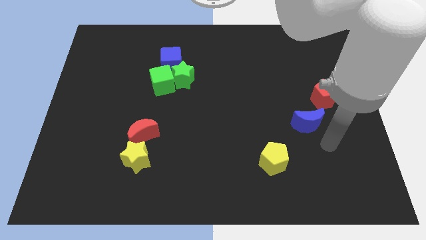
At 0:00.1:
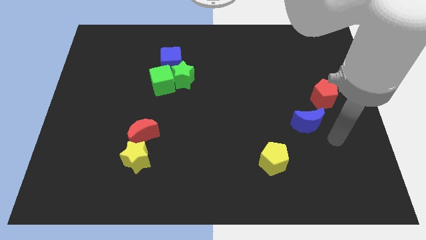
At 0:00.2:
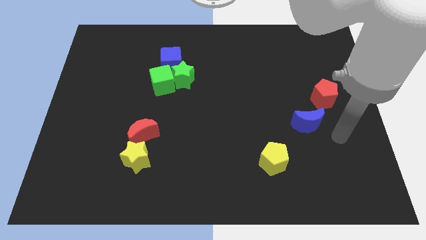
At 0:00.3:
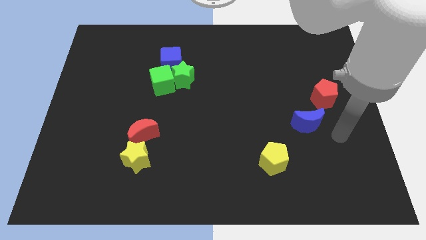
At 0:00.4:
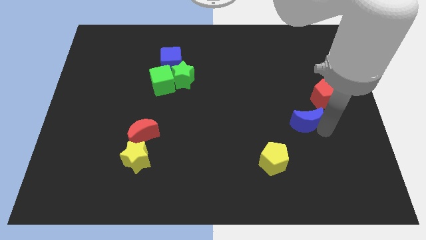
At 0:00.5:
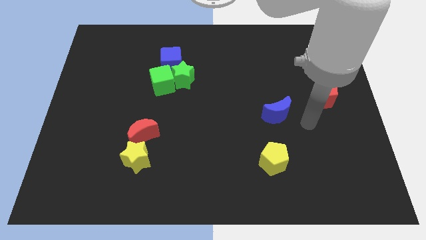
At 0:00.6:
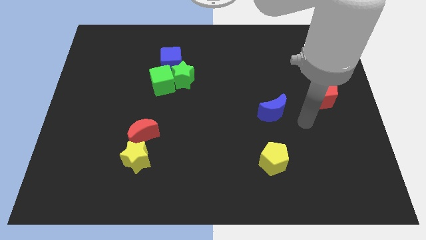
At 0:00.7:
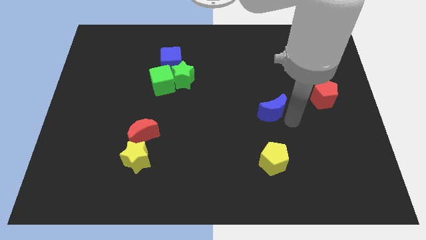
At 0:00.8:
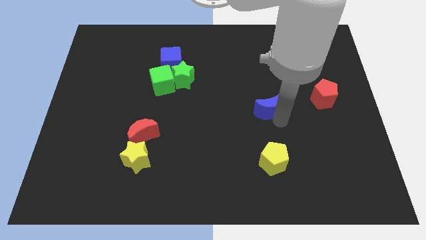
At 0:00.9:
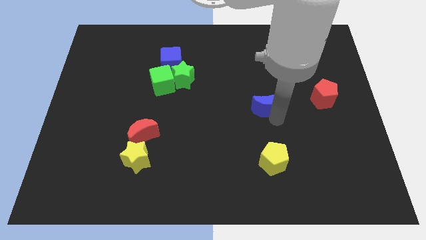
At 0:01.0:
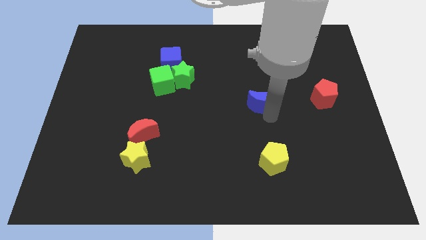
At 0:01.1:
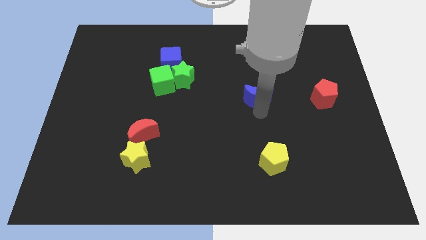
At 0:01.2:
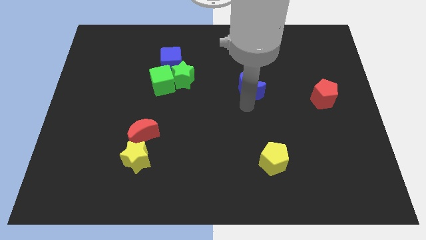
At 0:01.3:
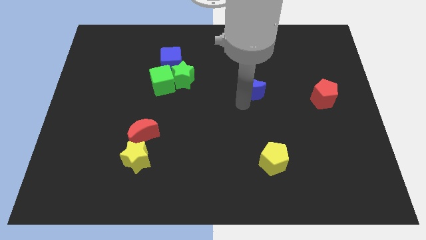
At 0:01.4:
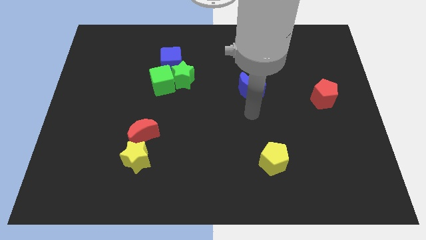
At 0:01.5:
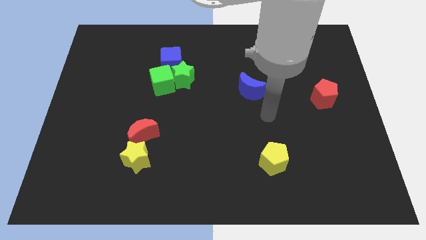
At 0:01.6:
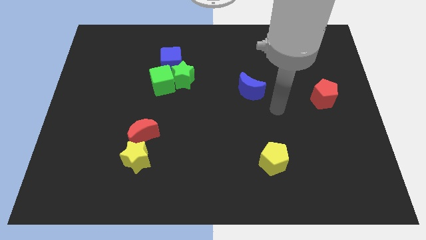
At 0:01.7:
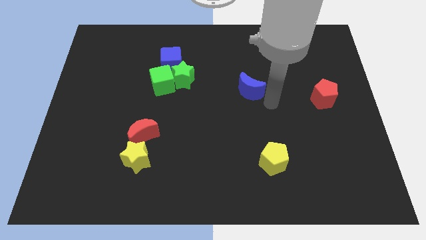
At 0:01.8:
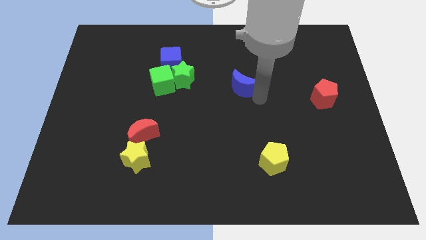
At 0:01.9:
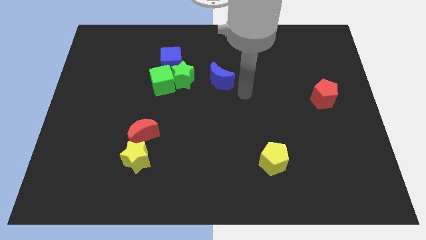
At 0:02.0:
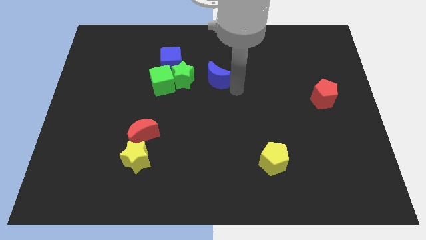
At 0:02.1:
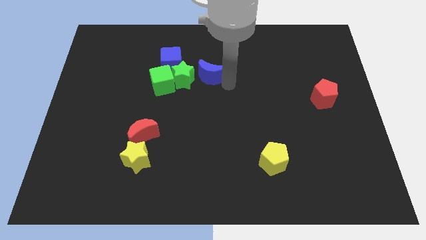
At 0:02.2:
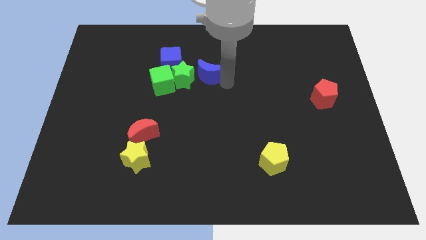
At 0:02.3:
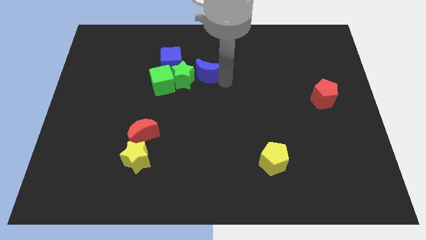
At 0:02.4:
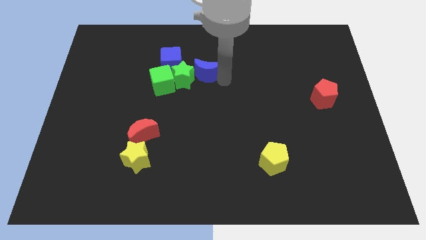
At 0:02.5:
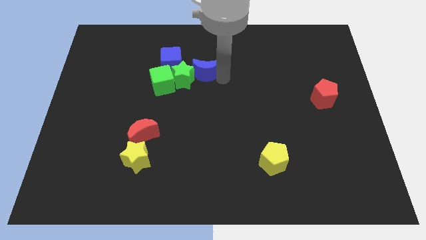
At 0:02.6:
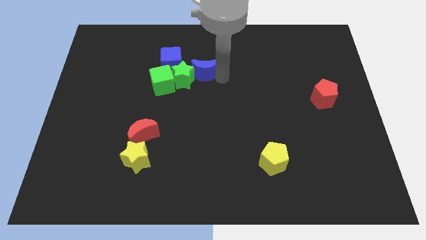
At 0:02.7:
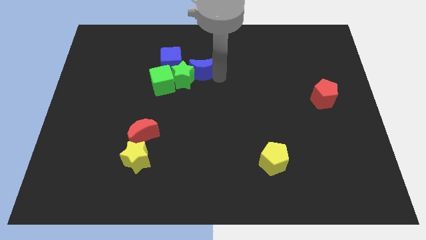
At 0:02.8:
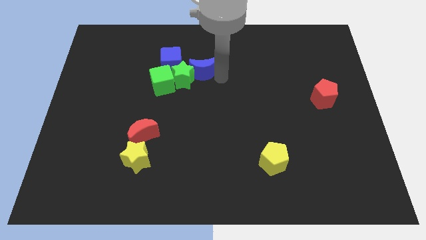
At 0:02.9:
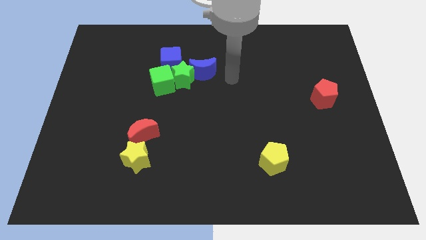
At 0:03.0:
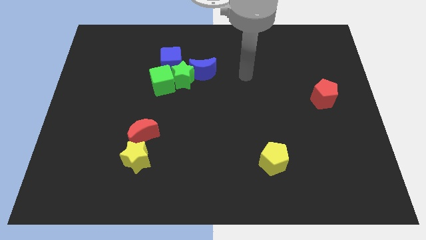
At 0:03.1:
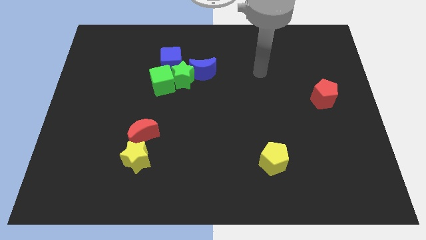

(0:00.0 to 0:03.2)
push the blue crescent to the right side of the green star

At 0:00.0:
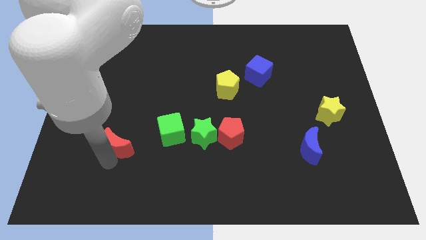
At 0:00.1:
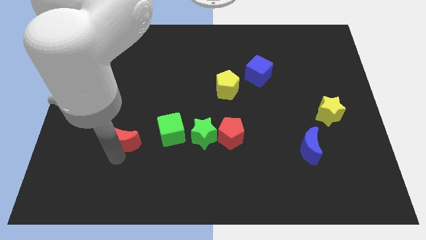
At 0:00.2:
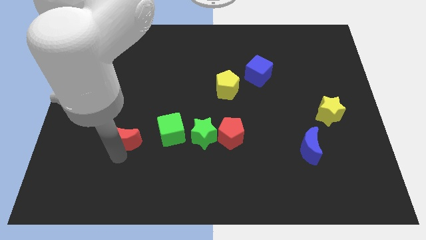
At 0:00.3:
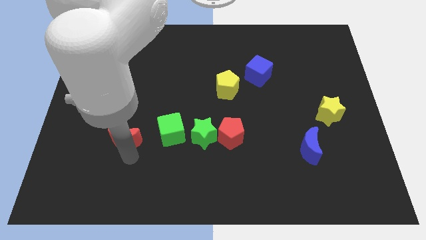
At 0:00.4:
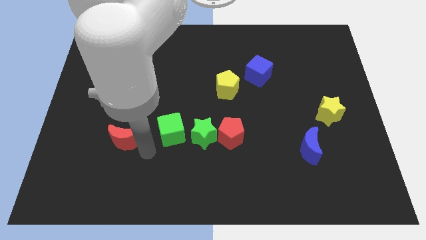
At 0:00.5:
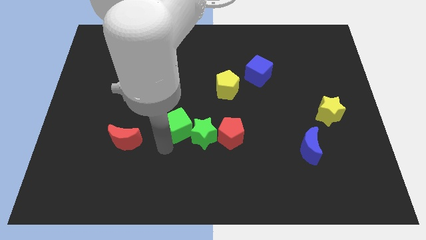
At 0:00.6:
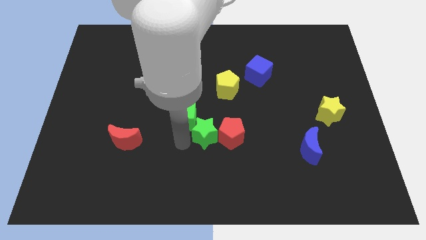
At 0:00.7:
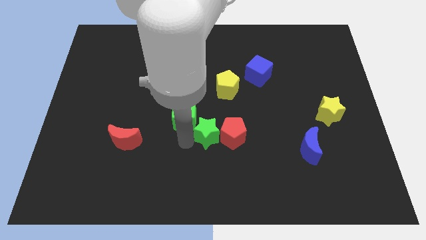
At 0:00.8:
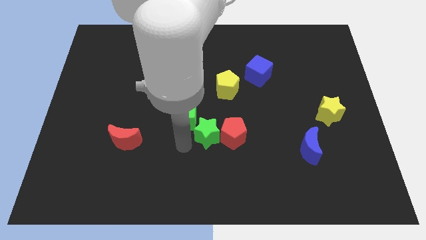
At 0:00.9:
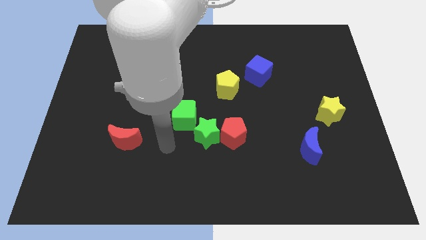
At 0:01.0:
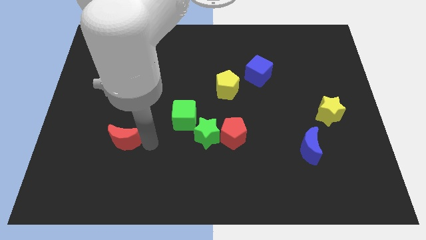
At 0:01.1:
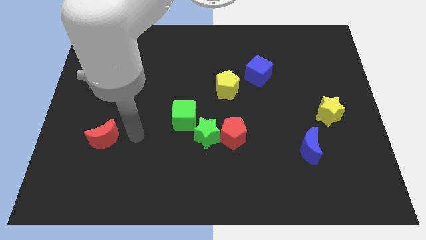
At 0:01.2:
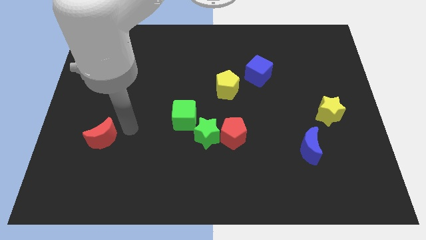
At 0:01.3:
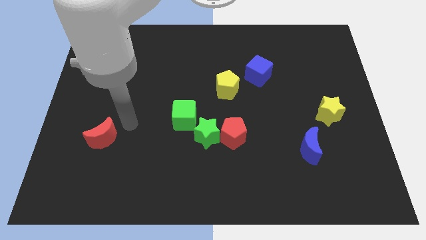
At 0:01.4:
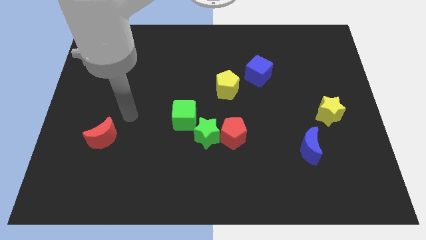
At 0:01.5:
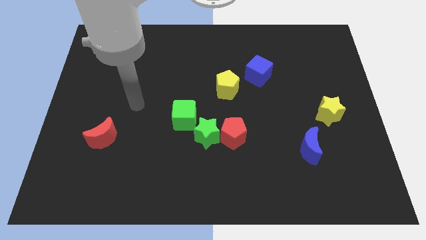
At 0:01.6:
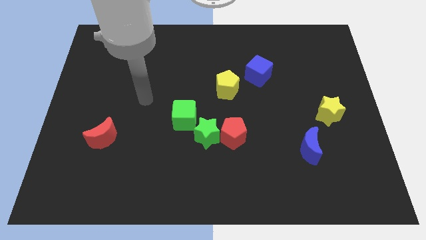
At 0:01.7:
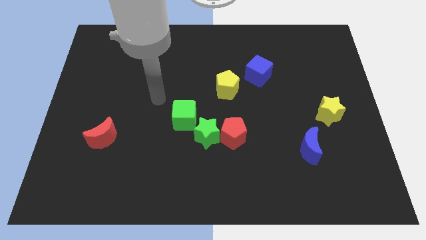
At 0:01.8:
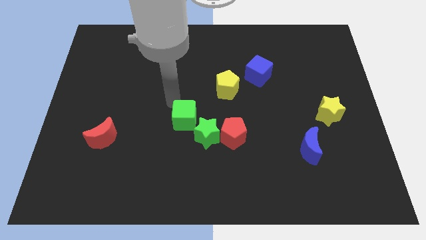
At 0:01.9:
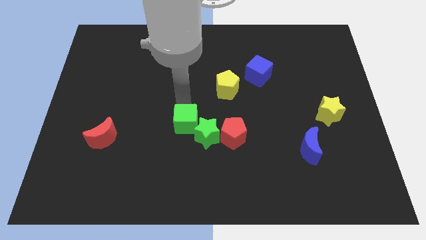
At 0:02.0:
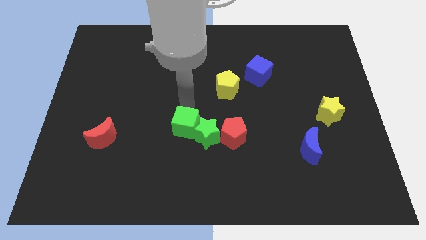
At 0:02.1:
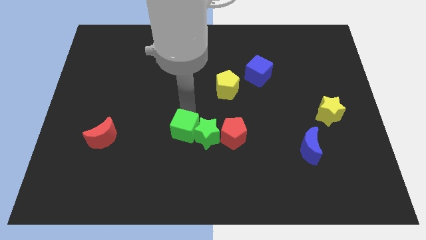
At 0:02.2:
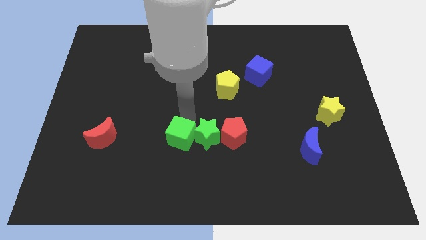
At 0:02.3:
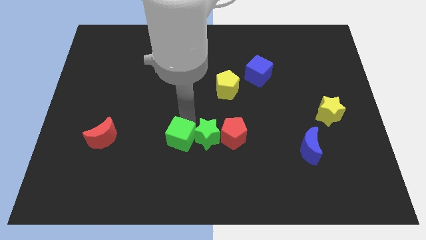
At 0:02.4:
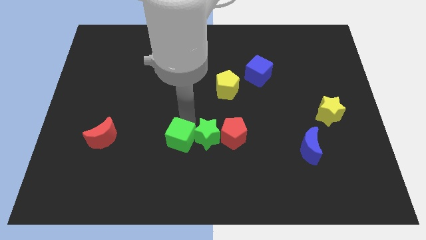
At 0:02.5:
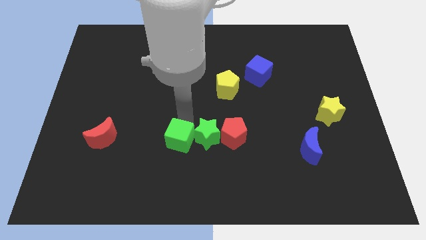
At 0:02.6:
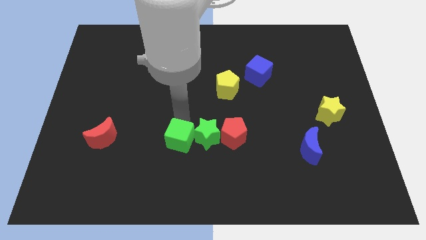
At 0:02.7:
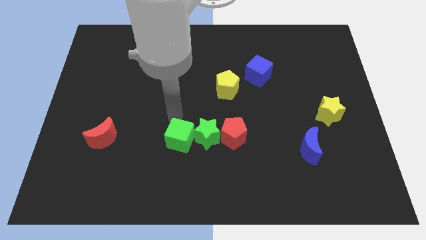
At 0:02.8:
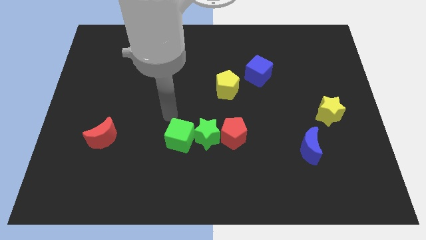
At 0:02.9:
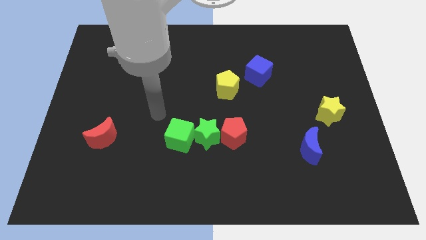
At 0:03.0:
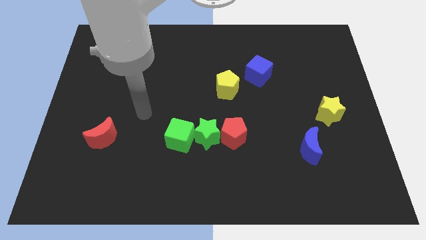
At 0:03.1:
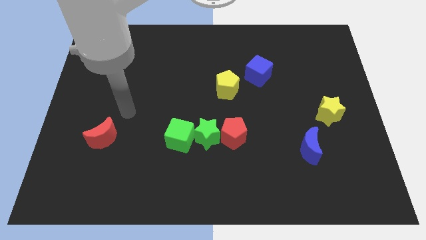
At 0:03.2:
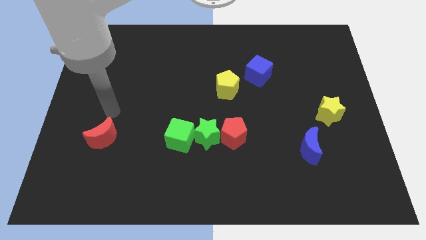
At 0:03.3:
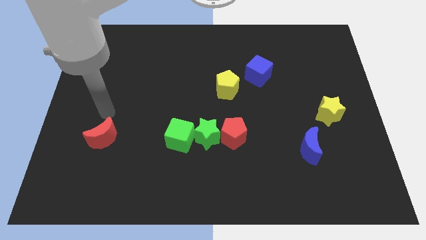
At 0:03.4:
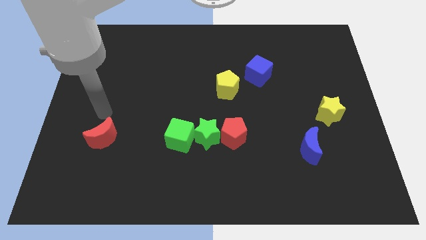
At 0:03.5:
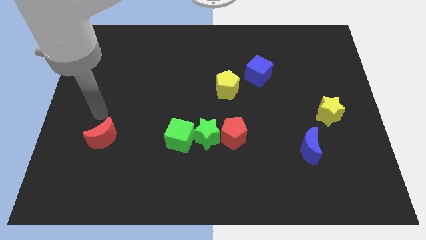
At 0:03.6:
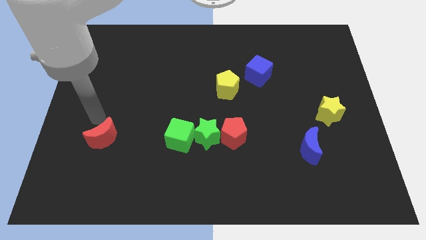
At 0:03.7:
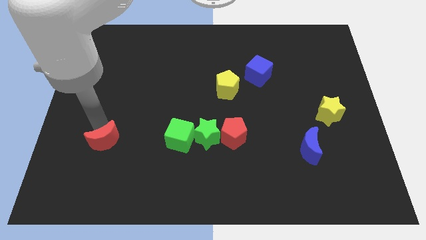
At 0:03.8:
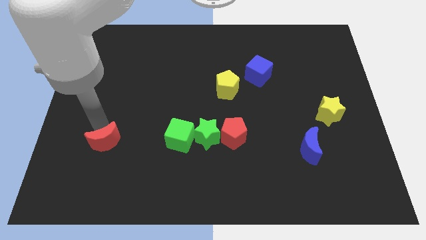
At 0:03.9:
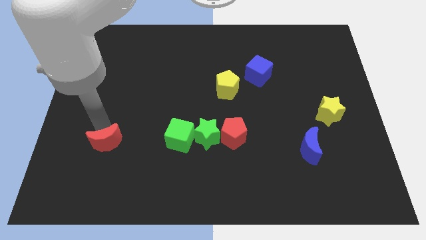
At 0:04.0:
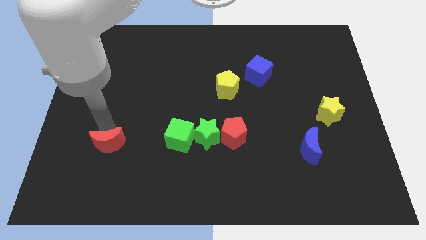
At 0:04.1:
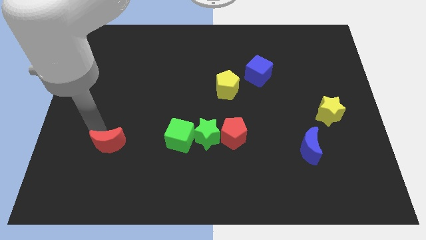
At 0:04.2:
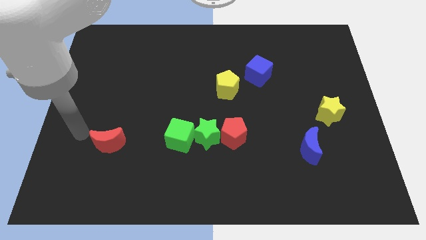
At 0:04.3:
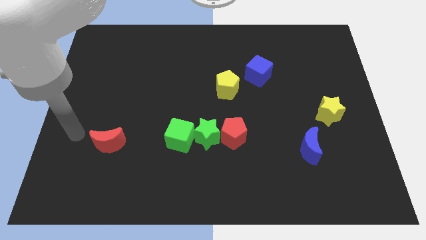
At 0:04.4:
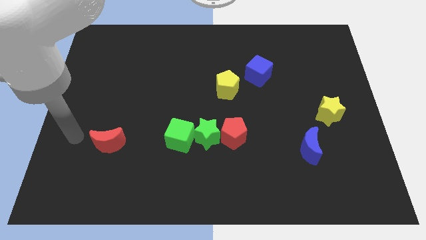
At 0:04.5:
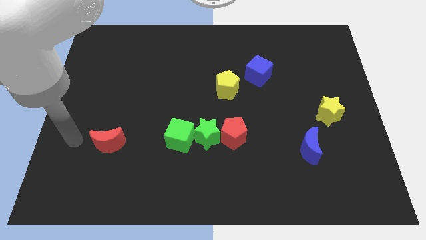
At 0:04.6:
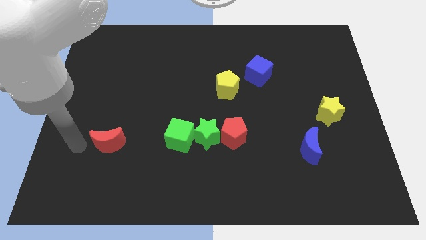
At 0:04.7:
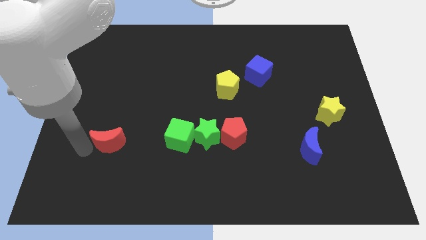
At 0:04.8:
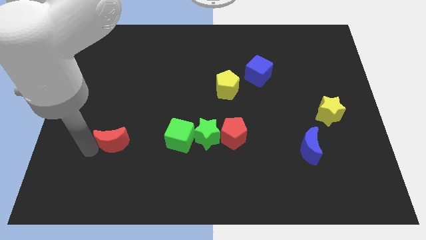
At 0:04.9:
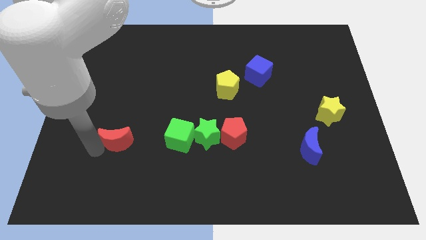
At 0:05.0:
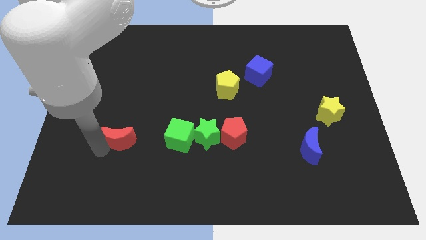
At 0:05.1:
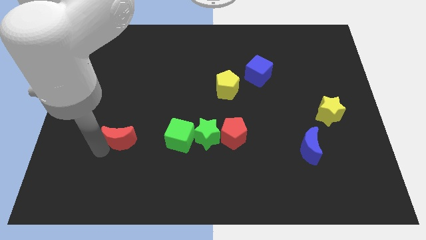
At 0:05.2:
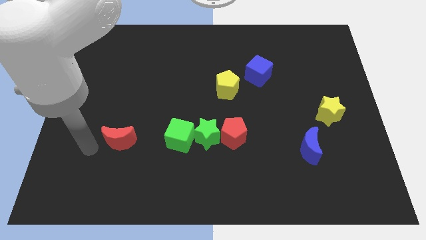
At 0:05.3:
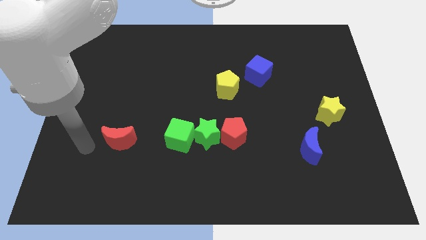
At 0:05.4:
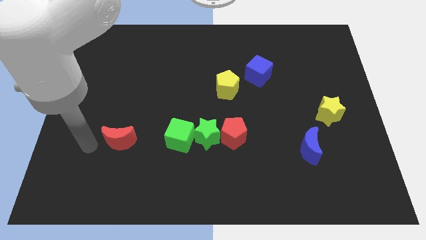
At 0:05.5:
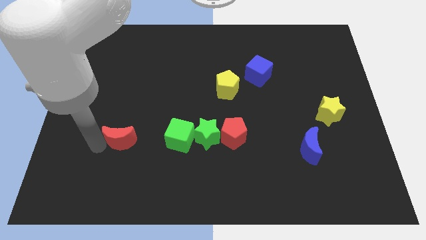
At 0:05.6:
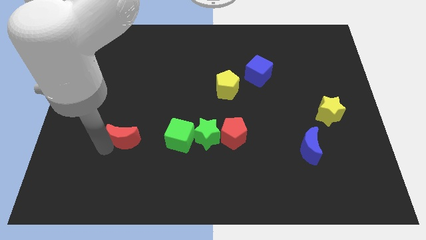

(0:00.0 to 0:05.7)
move the red crescent to the left of green cube
